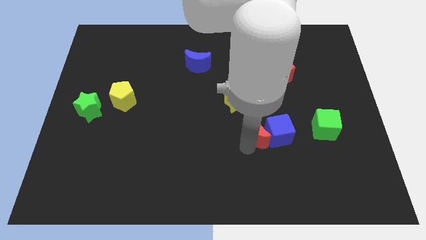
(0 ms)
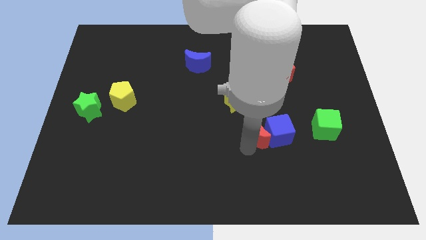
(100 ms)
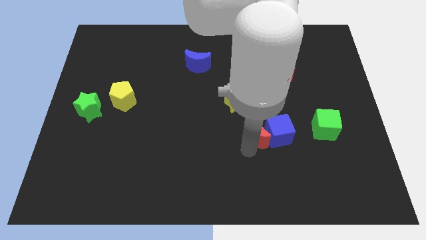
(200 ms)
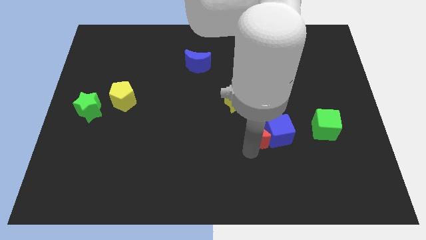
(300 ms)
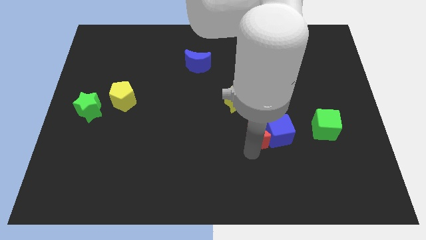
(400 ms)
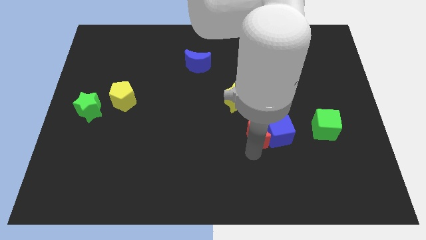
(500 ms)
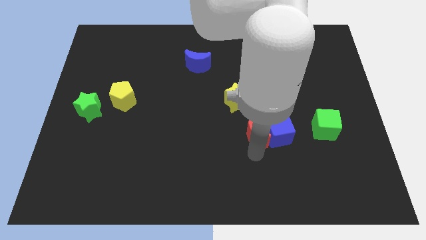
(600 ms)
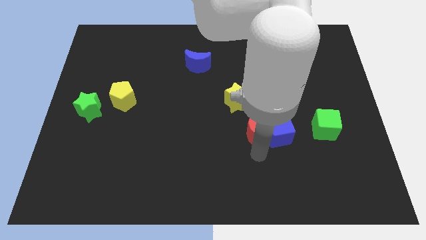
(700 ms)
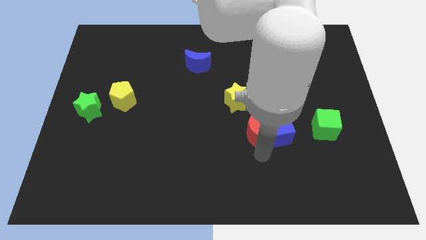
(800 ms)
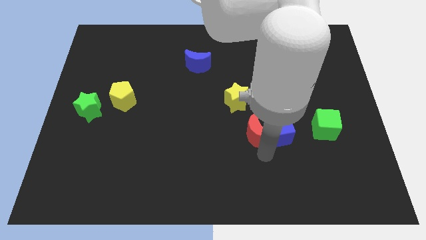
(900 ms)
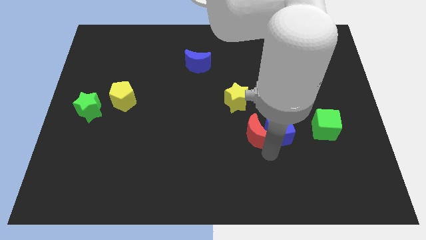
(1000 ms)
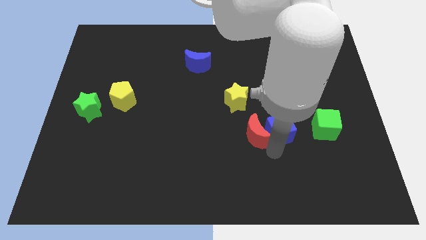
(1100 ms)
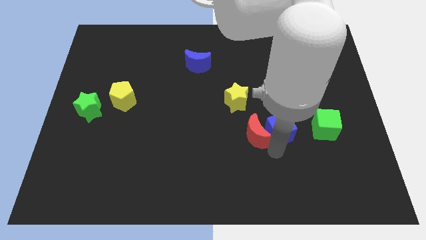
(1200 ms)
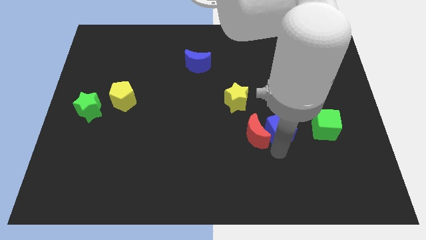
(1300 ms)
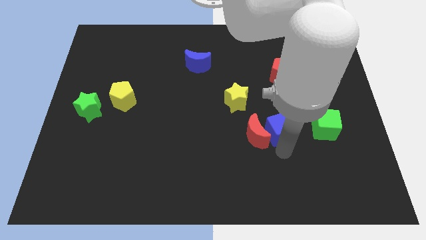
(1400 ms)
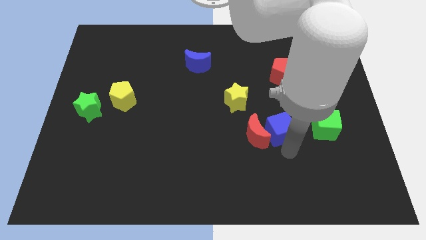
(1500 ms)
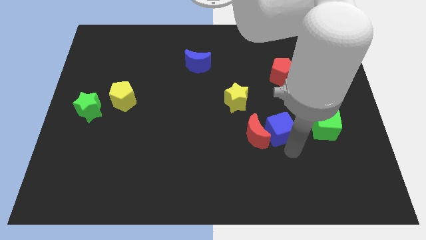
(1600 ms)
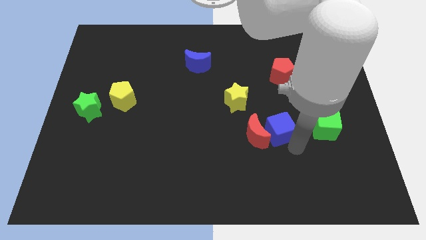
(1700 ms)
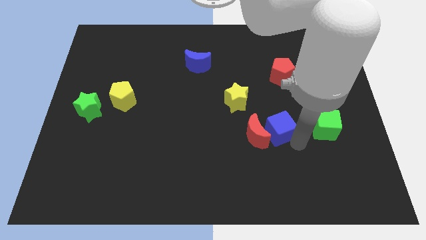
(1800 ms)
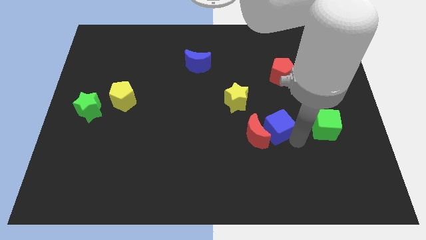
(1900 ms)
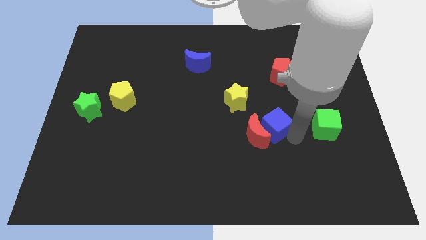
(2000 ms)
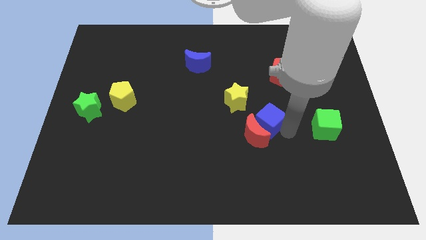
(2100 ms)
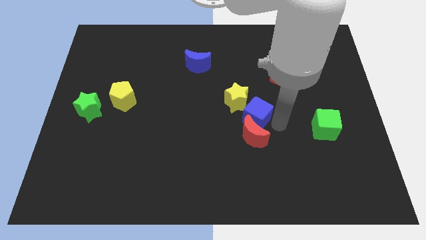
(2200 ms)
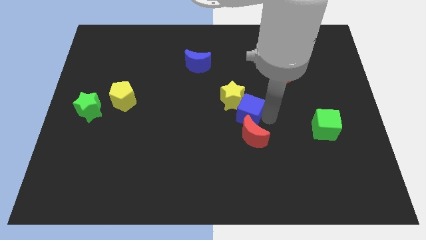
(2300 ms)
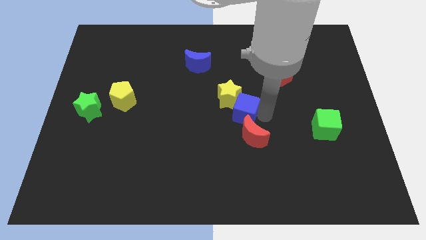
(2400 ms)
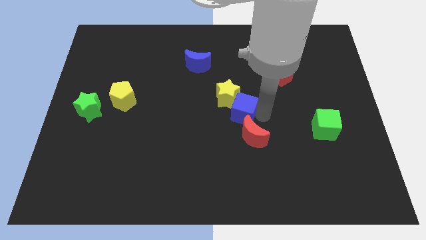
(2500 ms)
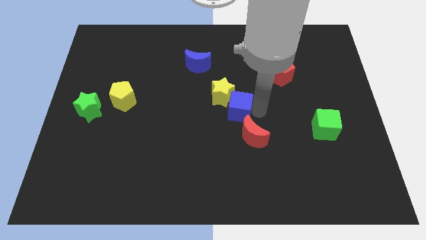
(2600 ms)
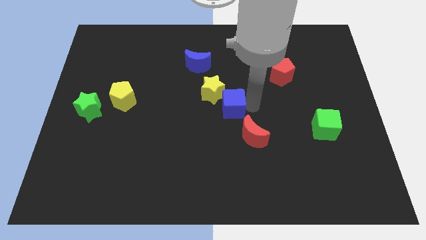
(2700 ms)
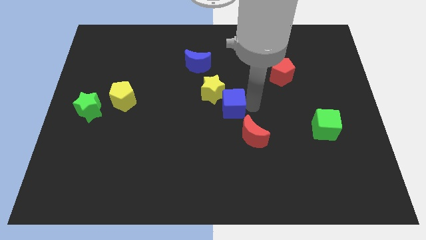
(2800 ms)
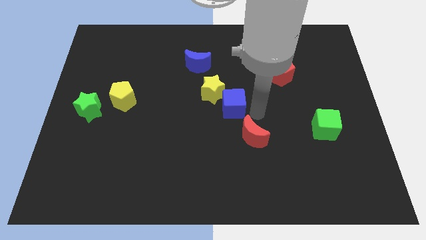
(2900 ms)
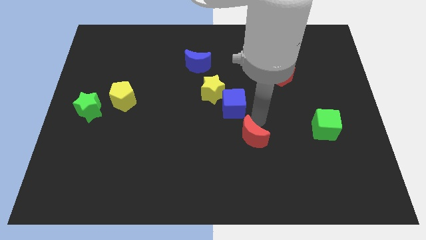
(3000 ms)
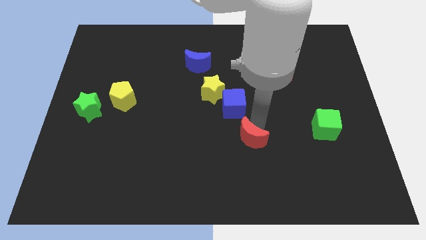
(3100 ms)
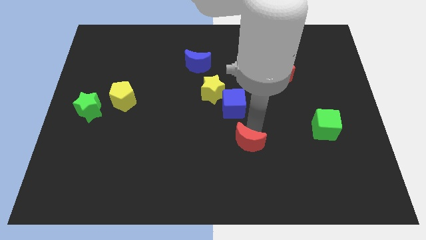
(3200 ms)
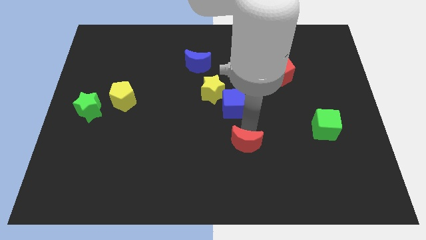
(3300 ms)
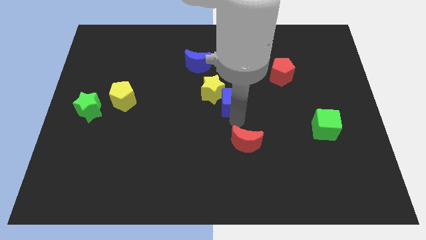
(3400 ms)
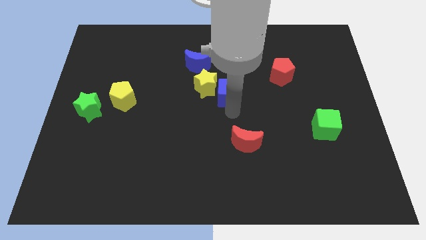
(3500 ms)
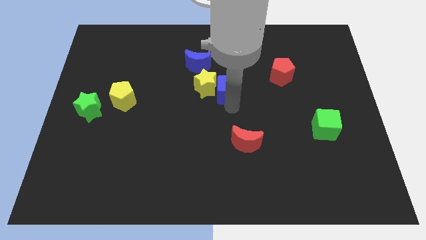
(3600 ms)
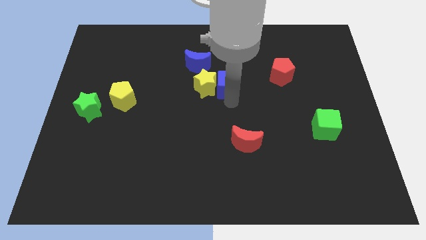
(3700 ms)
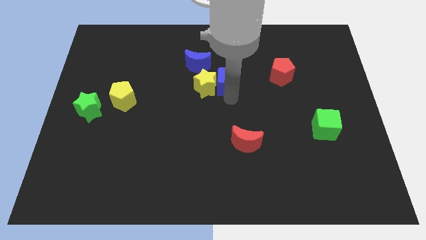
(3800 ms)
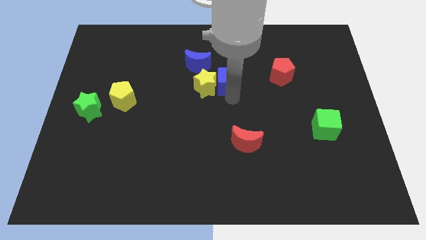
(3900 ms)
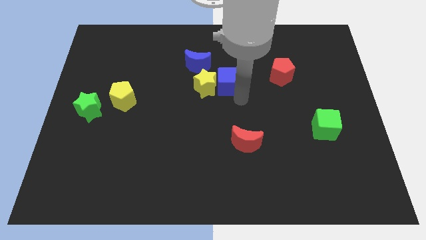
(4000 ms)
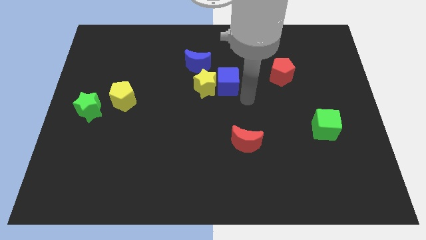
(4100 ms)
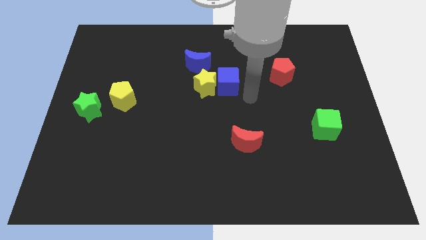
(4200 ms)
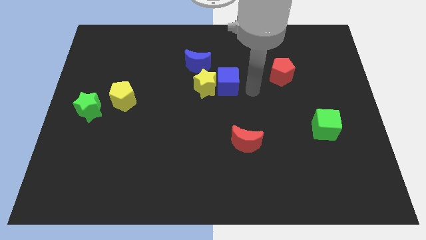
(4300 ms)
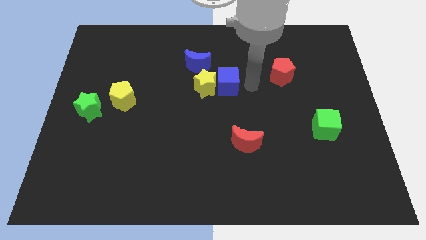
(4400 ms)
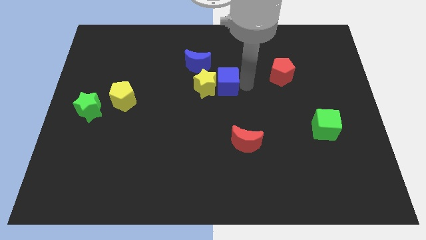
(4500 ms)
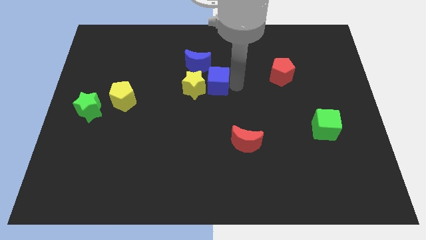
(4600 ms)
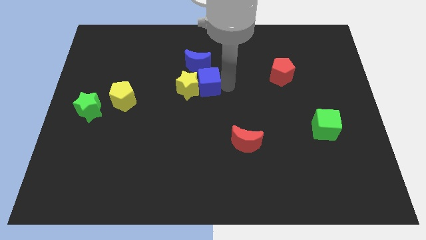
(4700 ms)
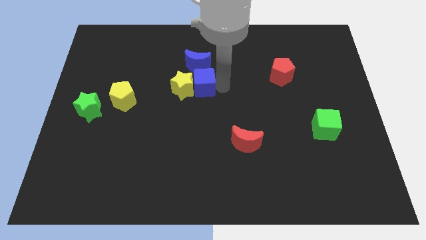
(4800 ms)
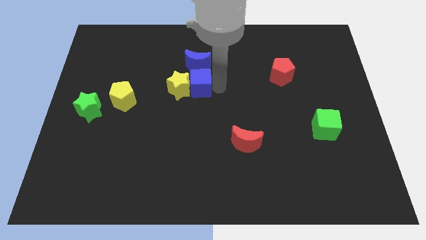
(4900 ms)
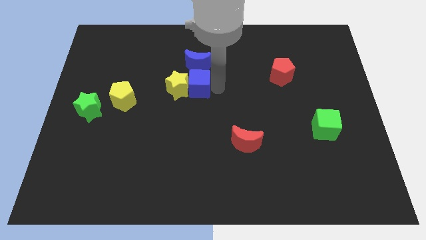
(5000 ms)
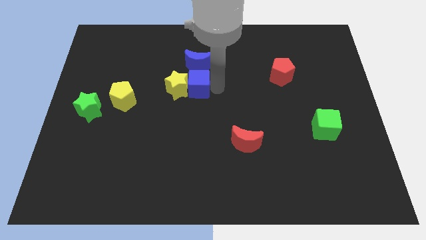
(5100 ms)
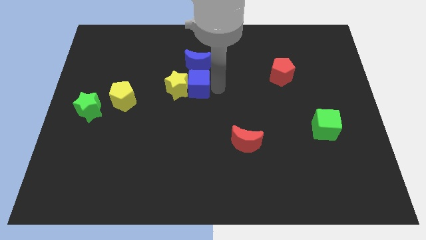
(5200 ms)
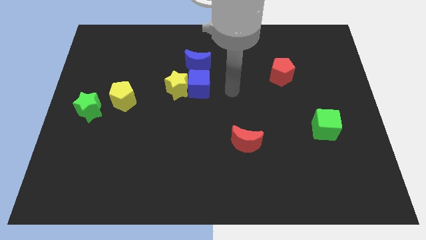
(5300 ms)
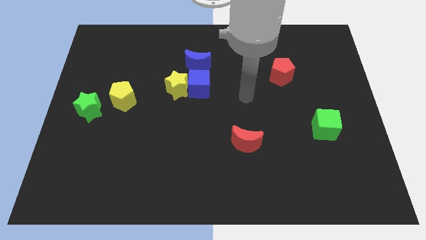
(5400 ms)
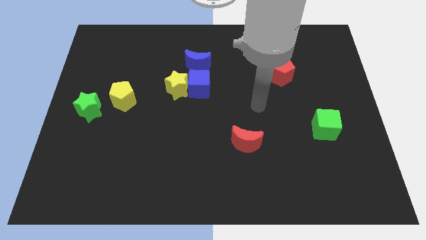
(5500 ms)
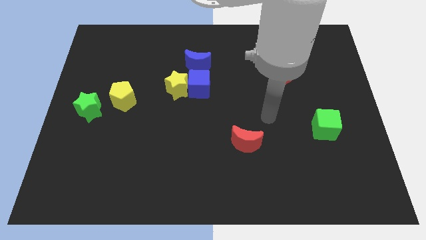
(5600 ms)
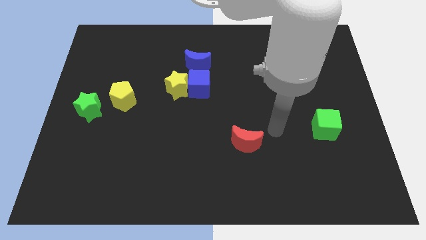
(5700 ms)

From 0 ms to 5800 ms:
place the blue cube and yellow star below the blue crescent

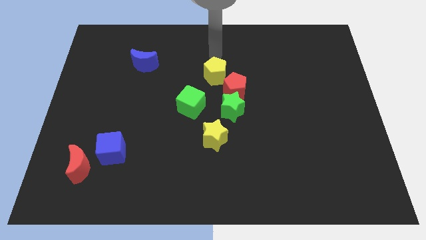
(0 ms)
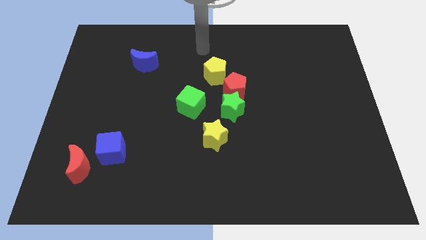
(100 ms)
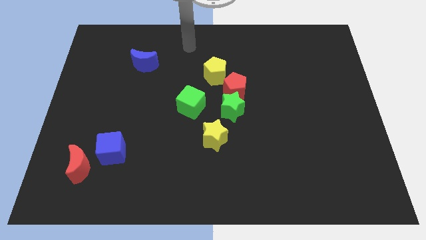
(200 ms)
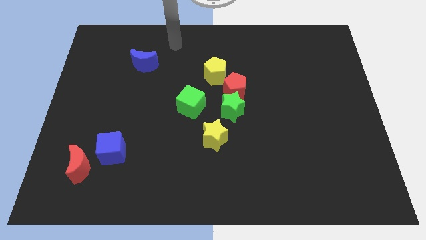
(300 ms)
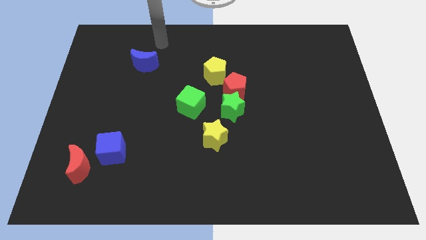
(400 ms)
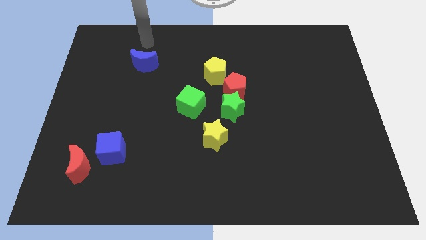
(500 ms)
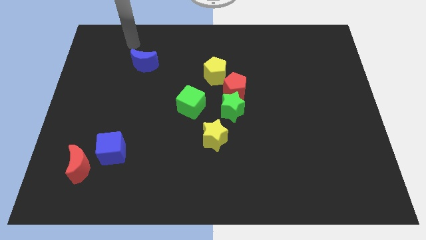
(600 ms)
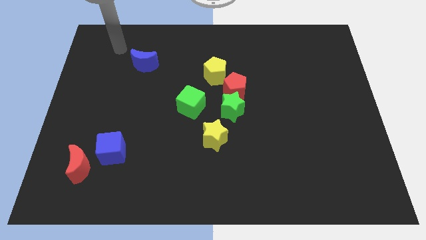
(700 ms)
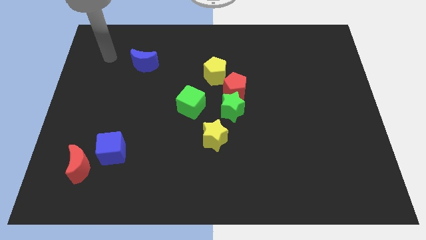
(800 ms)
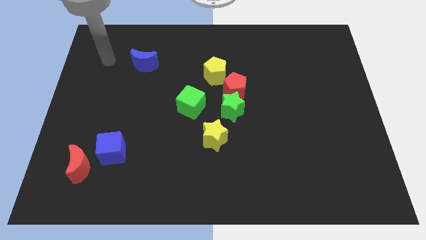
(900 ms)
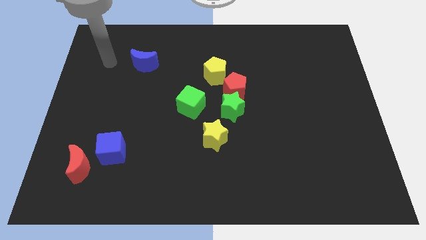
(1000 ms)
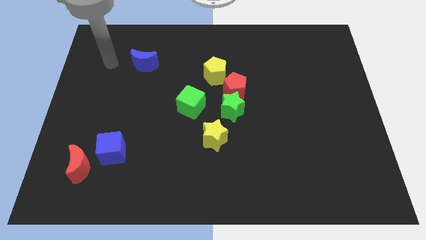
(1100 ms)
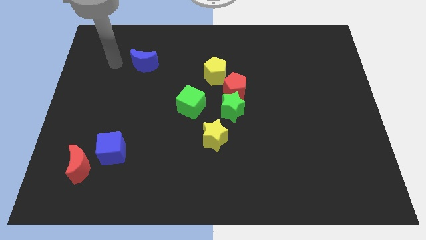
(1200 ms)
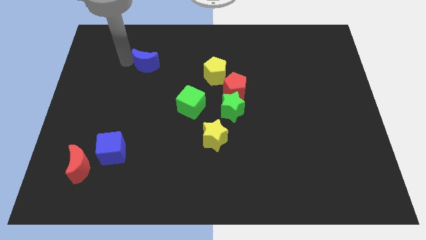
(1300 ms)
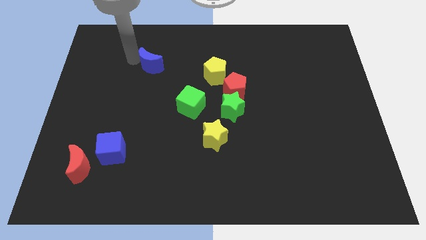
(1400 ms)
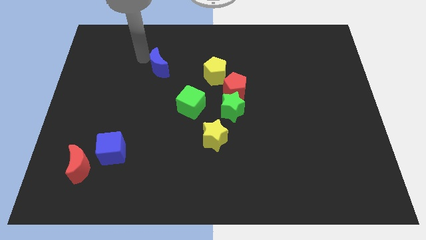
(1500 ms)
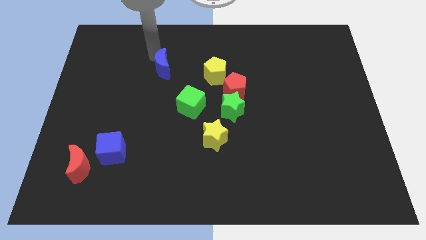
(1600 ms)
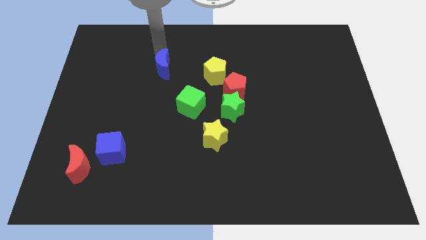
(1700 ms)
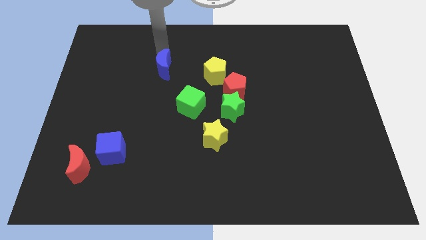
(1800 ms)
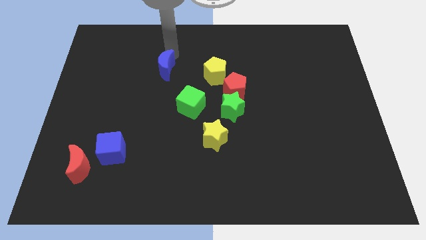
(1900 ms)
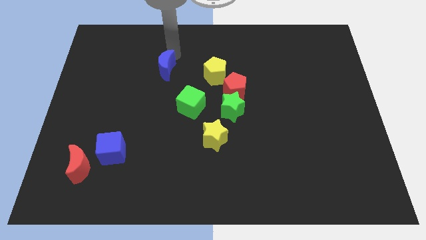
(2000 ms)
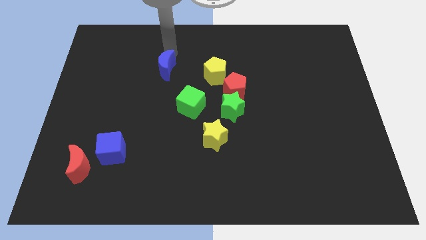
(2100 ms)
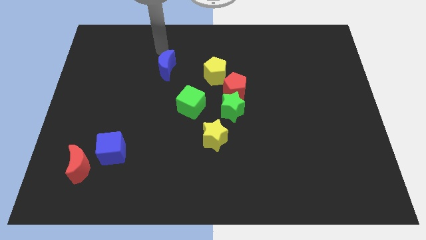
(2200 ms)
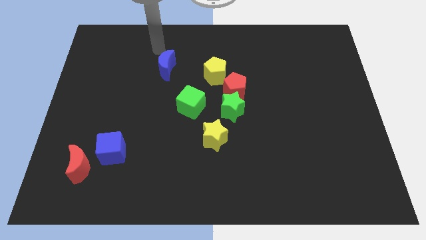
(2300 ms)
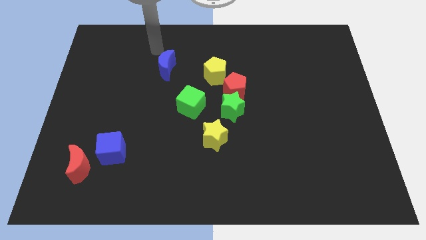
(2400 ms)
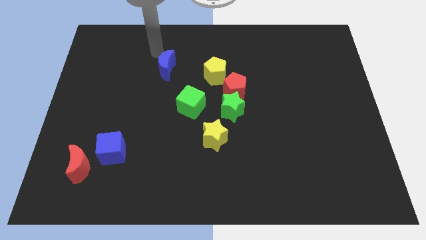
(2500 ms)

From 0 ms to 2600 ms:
push blue crescent slightly towards right

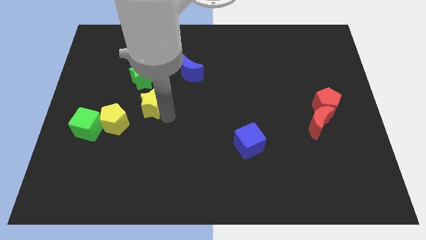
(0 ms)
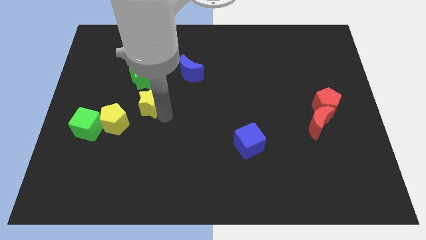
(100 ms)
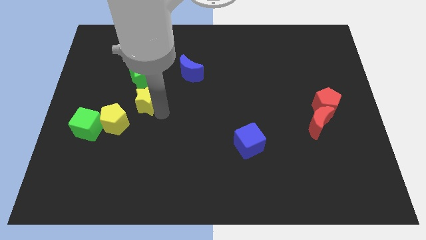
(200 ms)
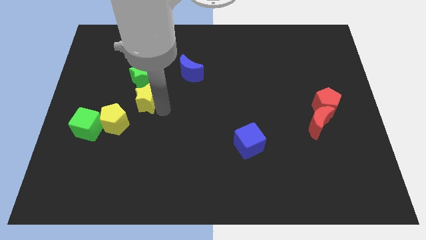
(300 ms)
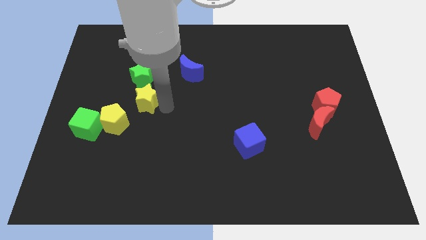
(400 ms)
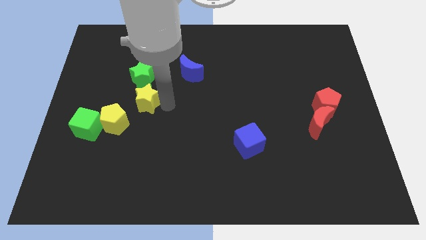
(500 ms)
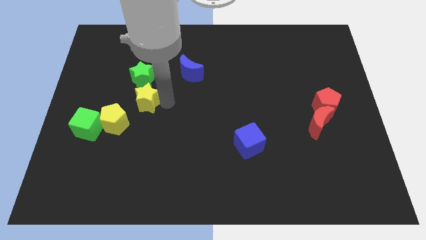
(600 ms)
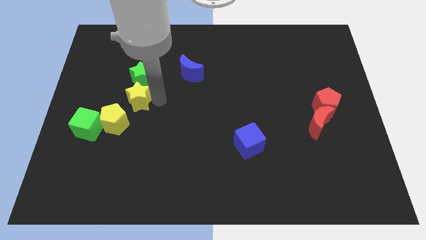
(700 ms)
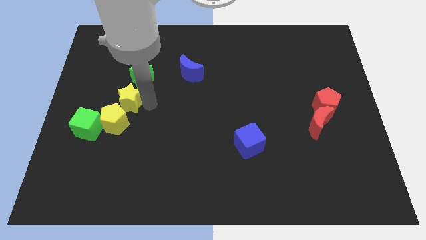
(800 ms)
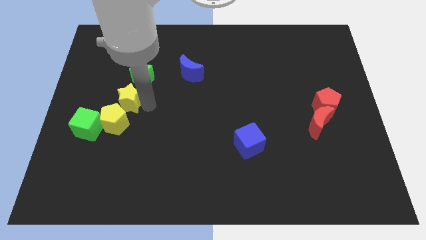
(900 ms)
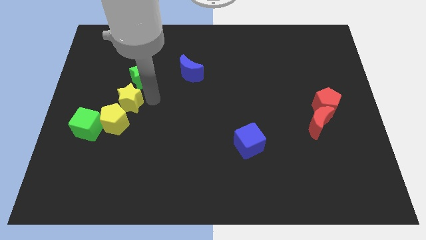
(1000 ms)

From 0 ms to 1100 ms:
slide yellow star in between green star and yellow pentagon
